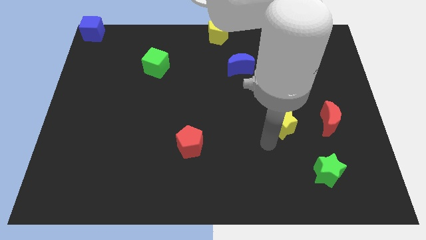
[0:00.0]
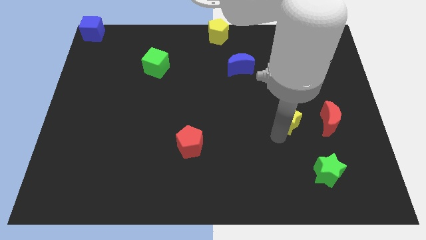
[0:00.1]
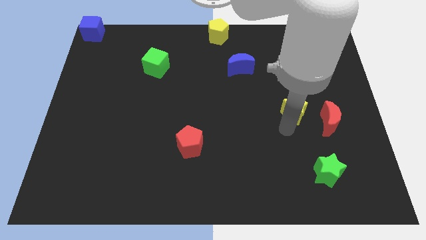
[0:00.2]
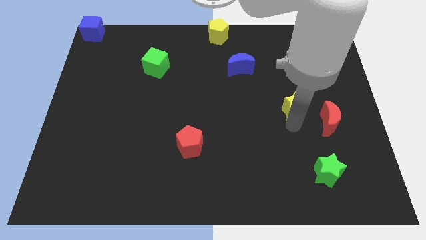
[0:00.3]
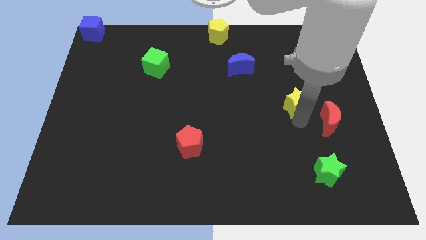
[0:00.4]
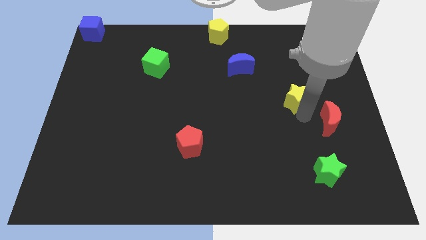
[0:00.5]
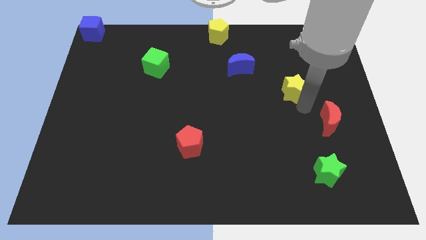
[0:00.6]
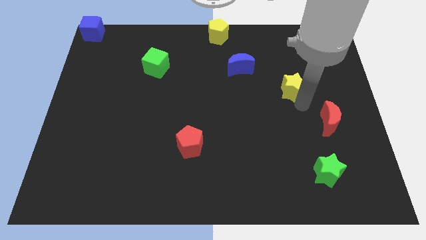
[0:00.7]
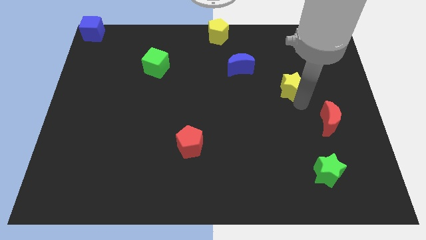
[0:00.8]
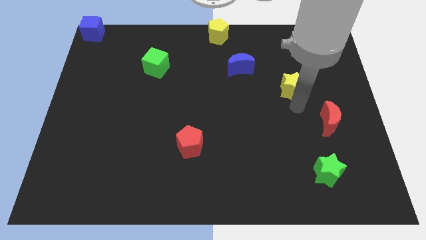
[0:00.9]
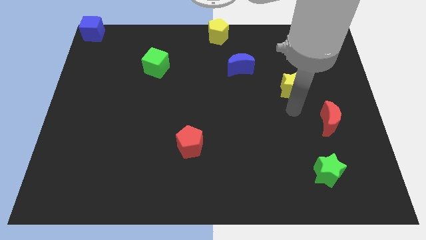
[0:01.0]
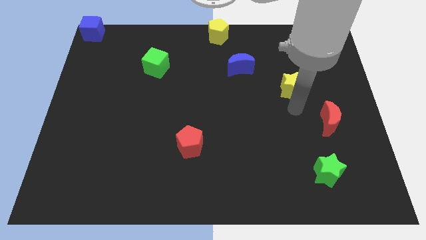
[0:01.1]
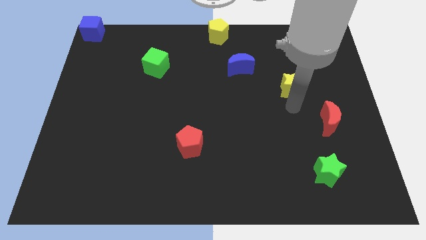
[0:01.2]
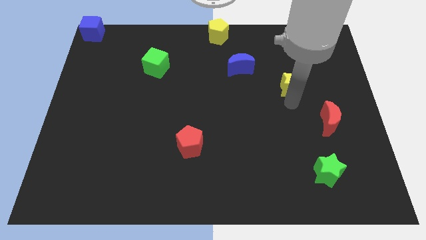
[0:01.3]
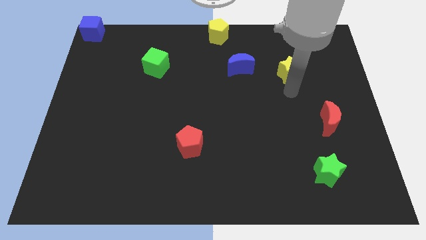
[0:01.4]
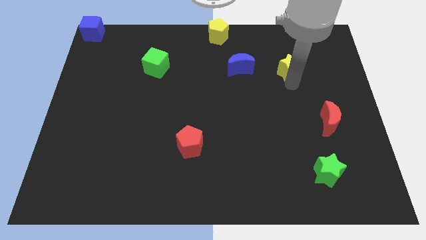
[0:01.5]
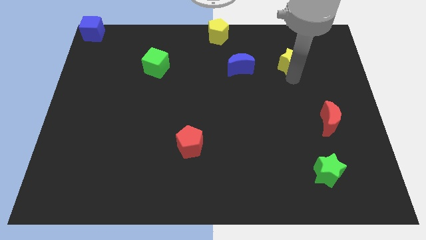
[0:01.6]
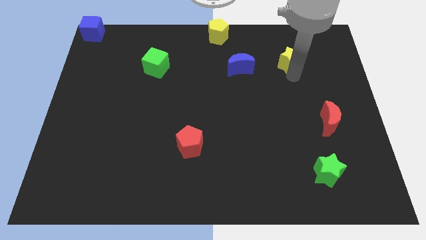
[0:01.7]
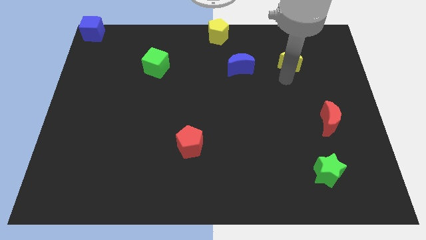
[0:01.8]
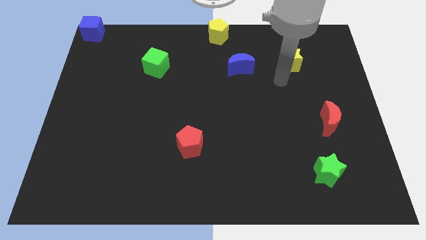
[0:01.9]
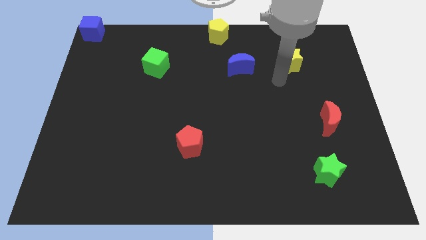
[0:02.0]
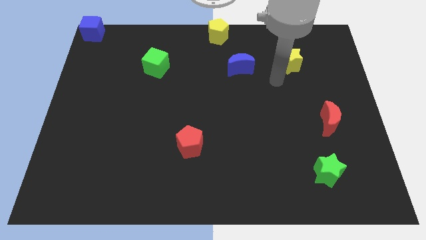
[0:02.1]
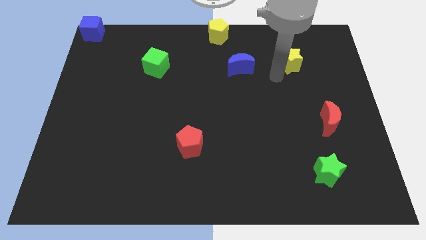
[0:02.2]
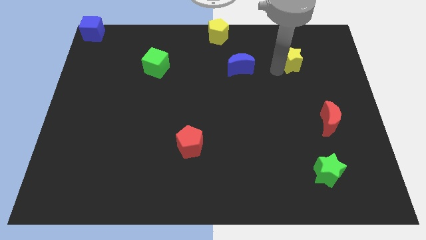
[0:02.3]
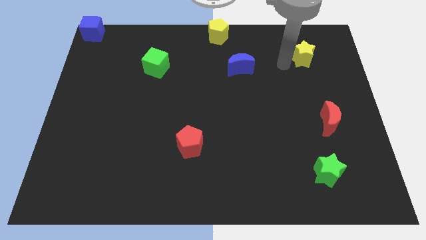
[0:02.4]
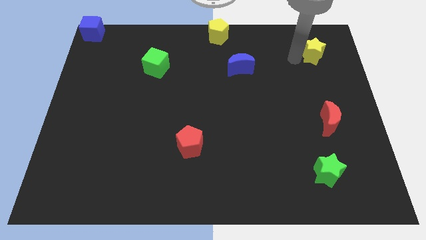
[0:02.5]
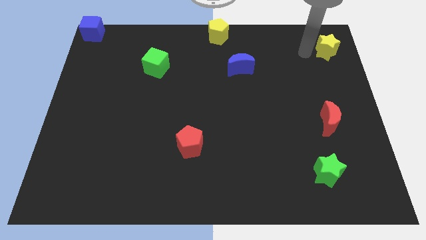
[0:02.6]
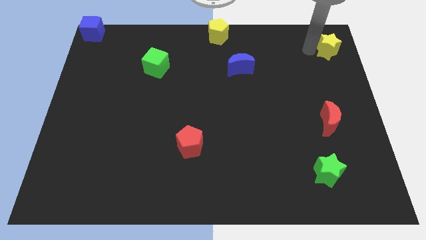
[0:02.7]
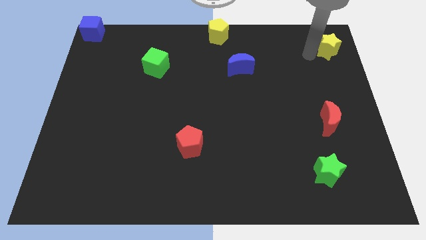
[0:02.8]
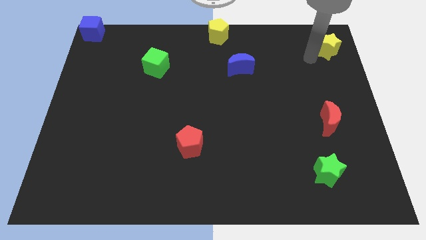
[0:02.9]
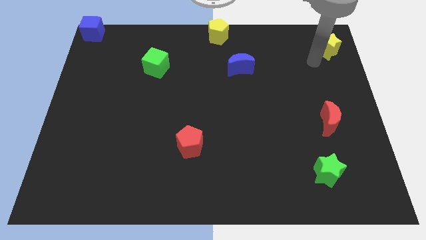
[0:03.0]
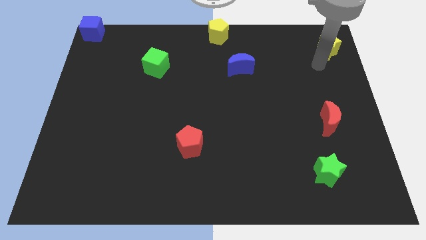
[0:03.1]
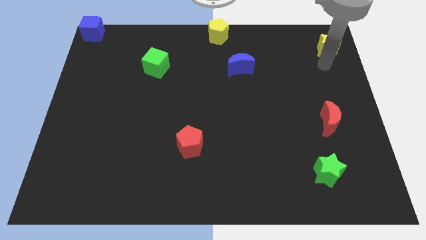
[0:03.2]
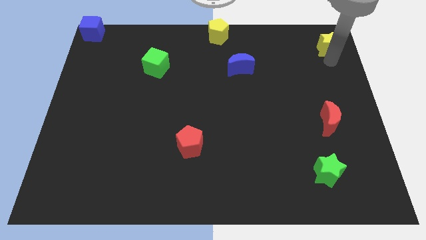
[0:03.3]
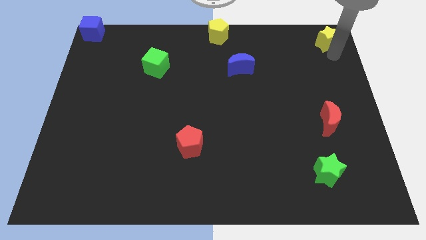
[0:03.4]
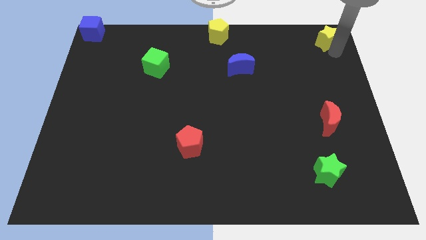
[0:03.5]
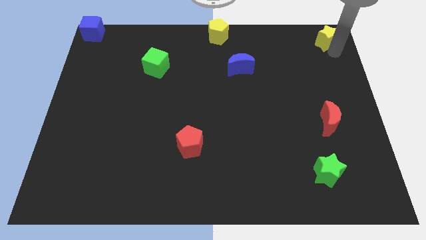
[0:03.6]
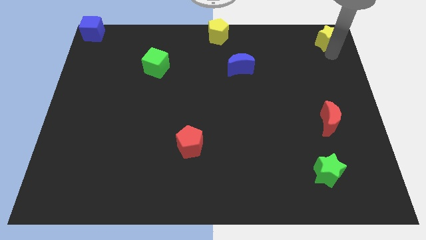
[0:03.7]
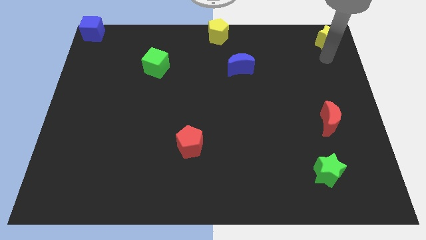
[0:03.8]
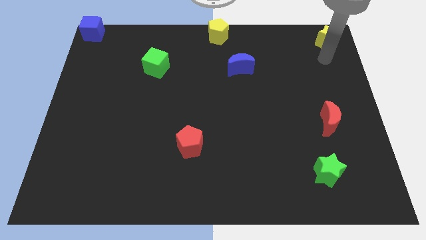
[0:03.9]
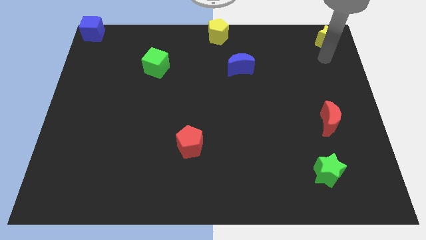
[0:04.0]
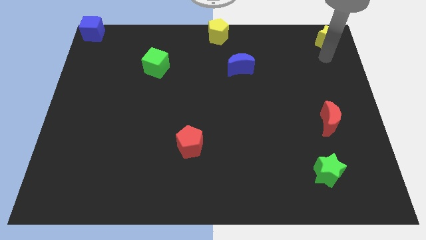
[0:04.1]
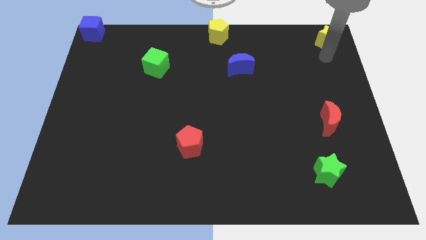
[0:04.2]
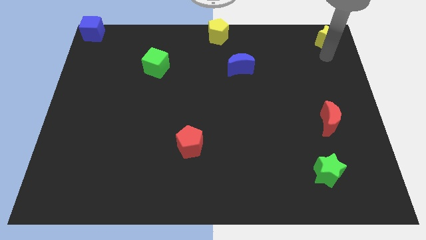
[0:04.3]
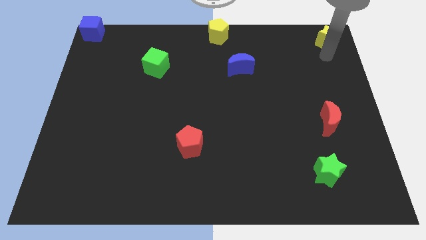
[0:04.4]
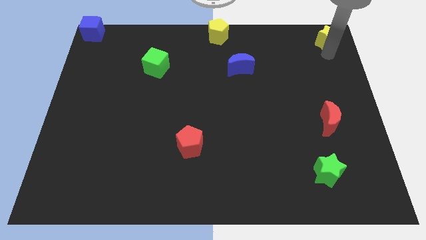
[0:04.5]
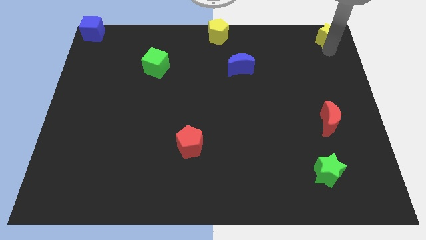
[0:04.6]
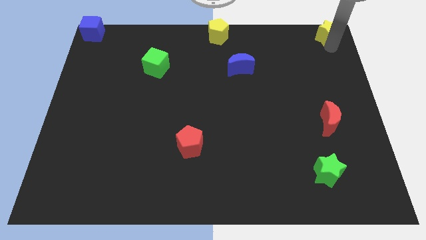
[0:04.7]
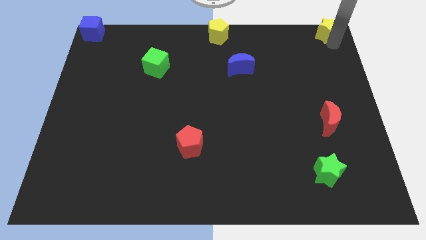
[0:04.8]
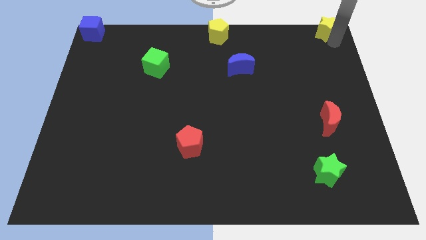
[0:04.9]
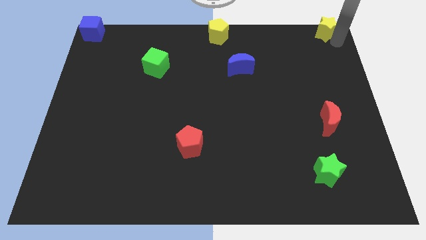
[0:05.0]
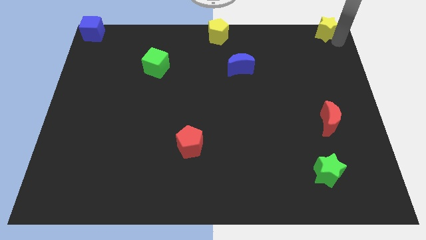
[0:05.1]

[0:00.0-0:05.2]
place the yellow star right to the yellow pentagon

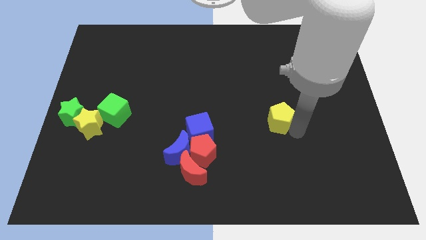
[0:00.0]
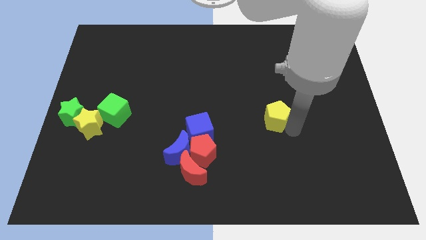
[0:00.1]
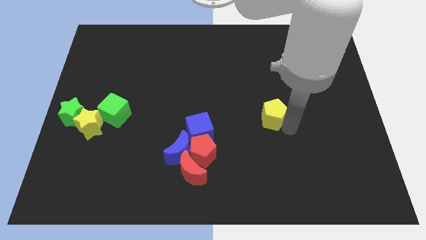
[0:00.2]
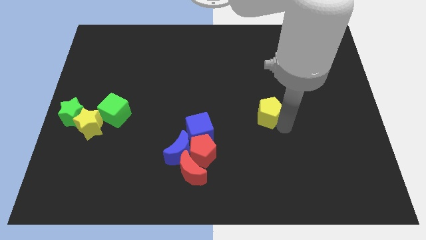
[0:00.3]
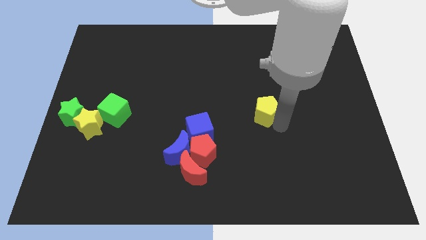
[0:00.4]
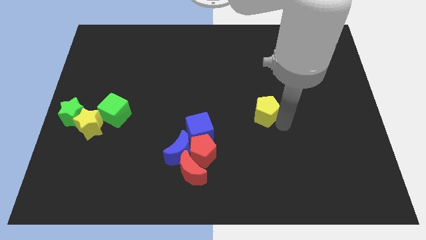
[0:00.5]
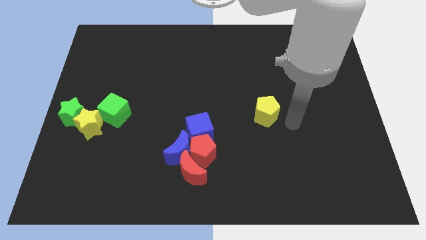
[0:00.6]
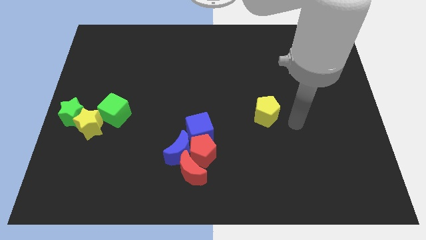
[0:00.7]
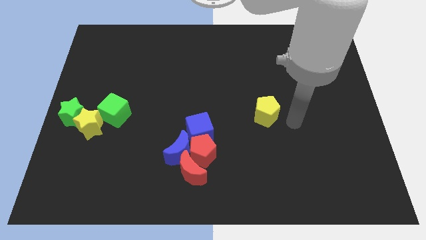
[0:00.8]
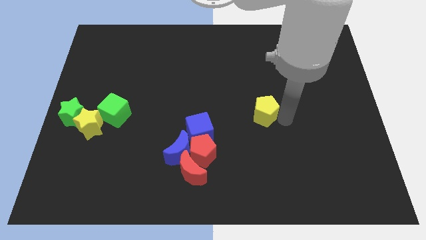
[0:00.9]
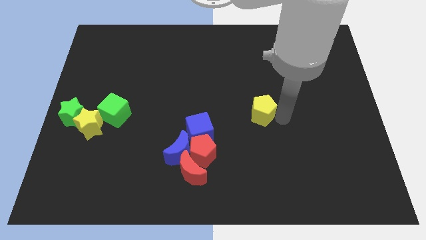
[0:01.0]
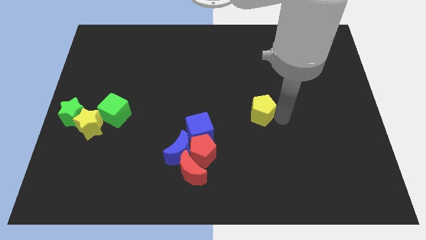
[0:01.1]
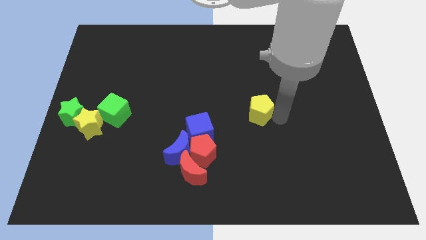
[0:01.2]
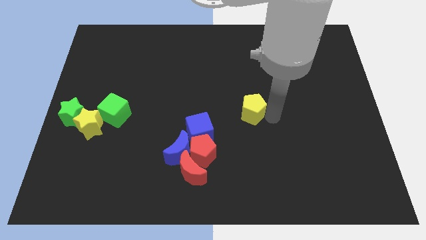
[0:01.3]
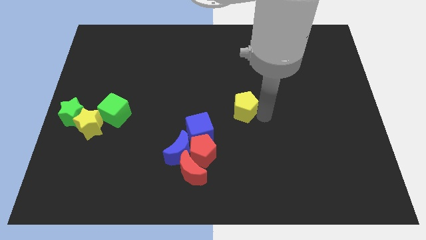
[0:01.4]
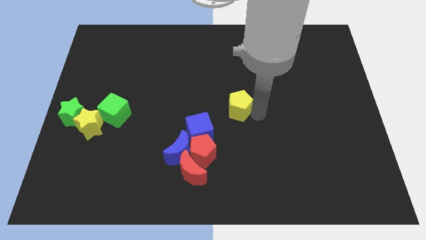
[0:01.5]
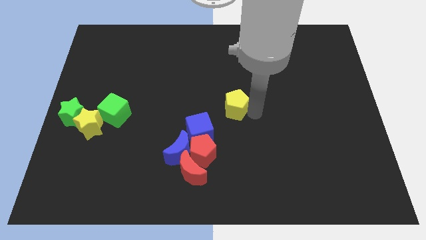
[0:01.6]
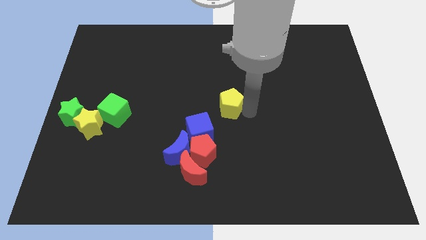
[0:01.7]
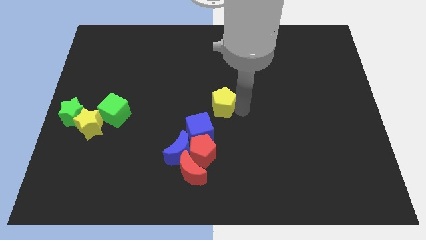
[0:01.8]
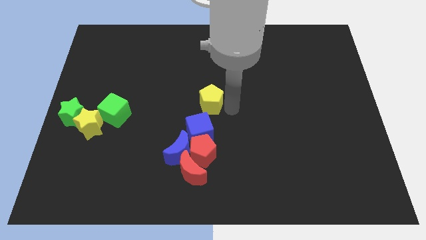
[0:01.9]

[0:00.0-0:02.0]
push the yellow pentagon at the center of the board

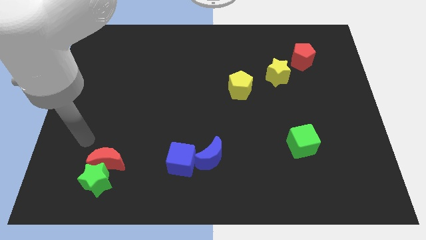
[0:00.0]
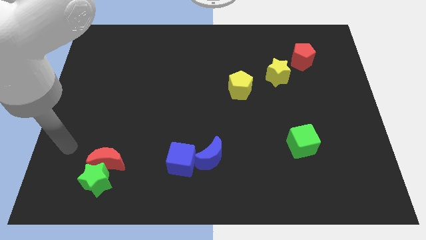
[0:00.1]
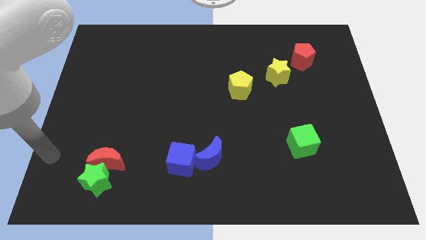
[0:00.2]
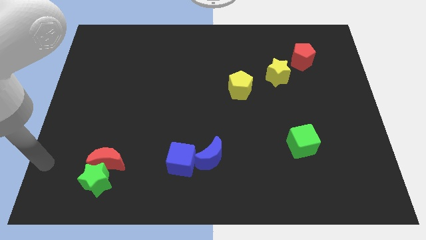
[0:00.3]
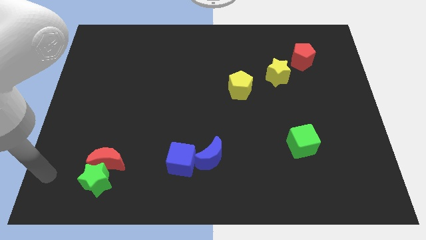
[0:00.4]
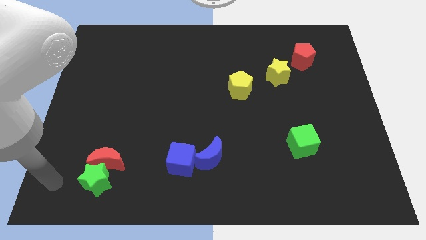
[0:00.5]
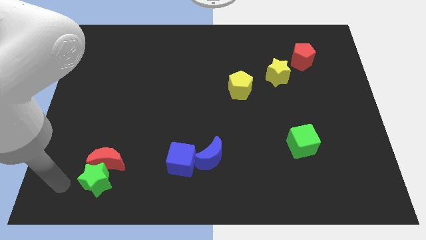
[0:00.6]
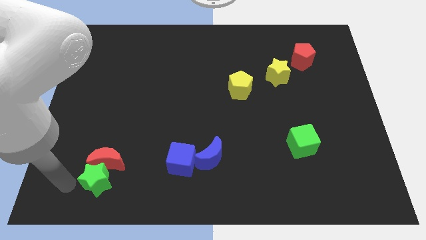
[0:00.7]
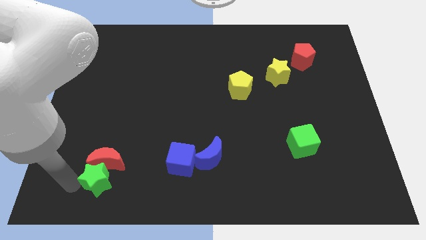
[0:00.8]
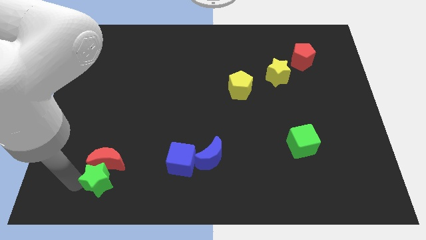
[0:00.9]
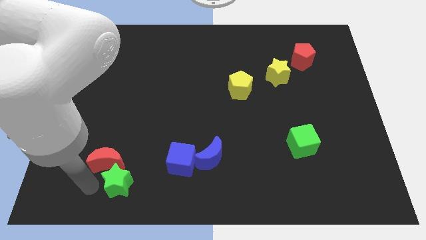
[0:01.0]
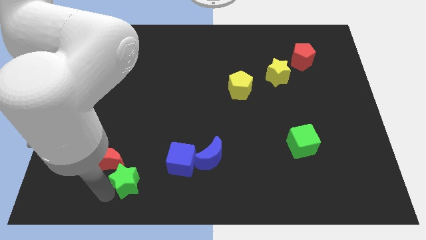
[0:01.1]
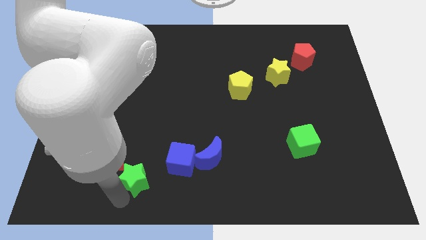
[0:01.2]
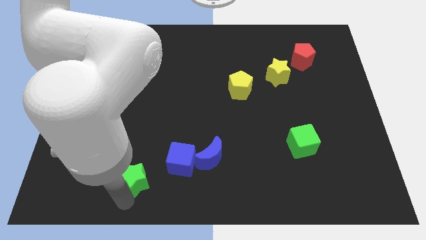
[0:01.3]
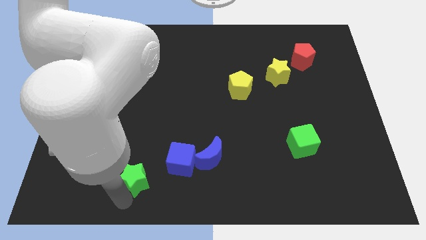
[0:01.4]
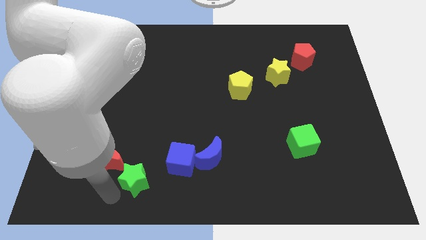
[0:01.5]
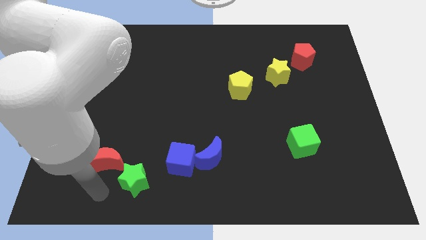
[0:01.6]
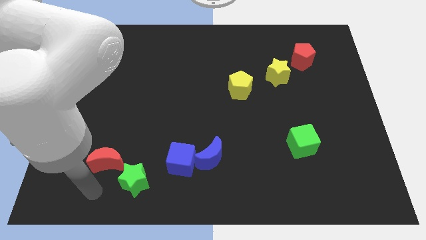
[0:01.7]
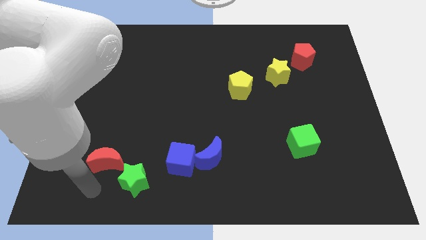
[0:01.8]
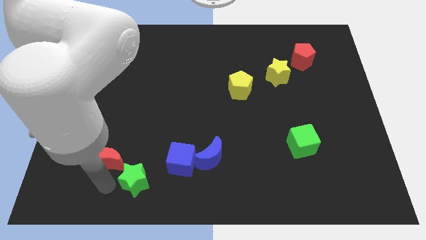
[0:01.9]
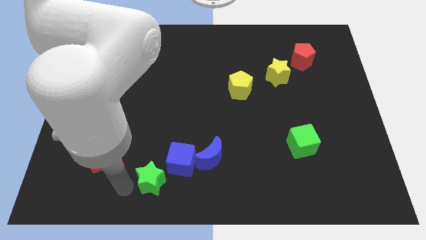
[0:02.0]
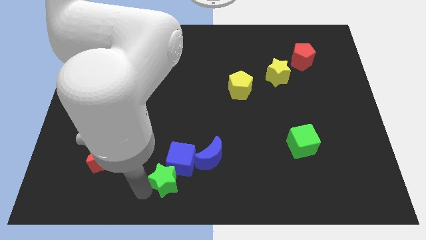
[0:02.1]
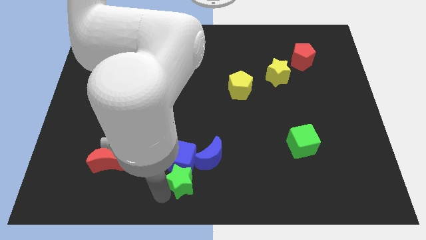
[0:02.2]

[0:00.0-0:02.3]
move the green star down to the blue cube
